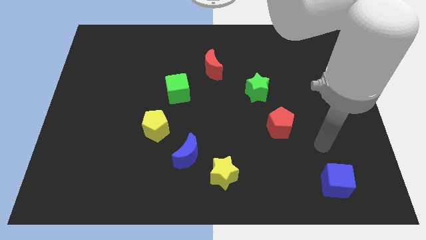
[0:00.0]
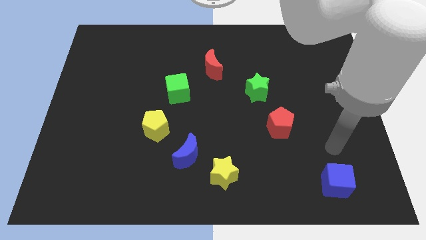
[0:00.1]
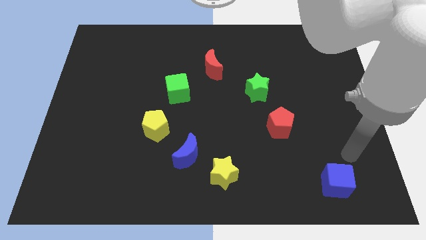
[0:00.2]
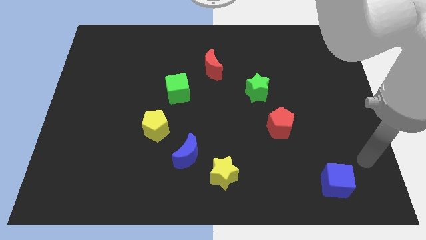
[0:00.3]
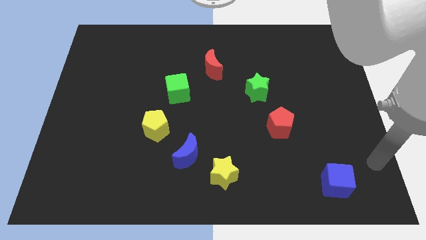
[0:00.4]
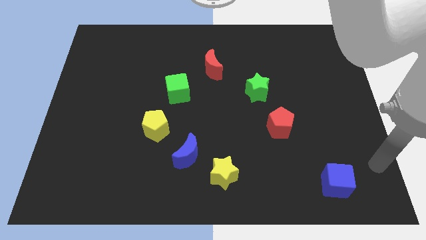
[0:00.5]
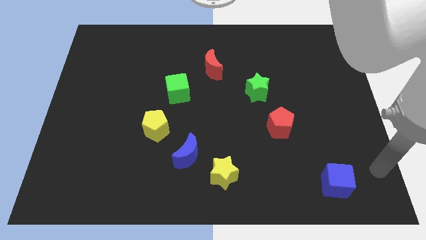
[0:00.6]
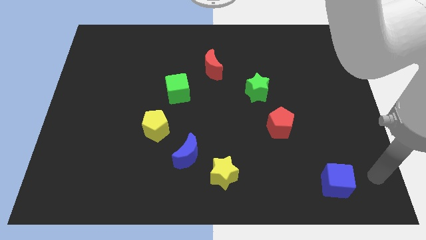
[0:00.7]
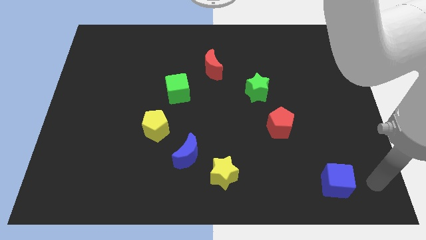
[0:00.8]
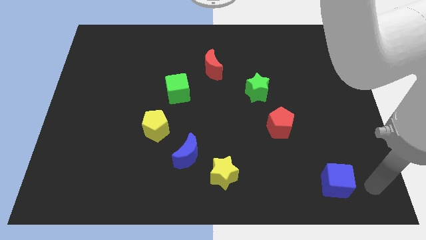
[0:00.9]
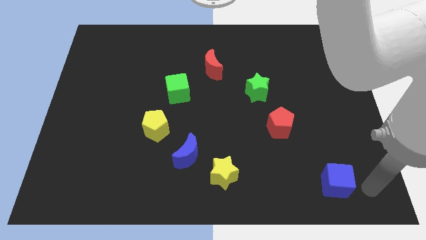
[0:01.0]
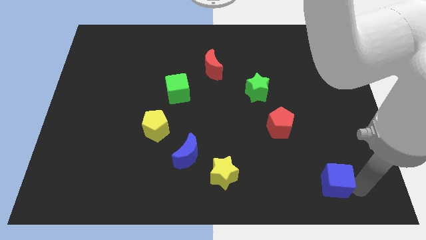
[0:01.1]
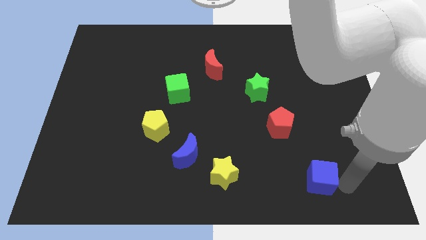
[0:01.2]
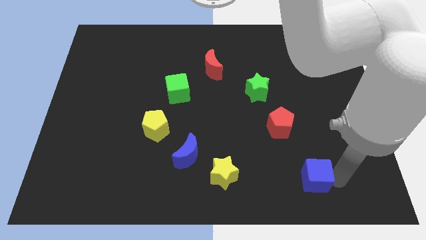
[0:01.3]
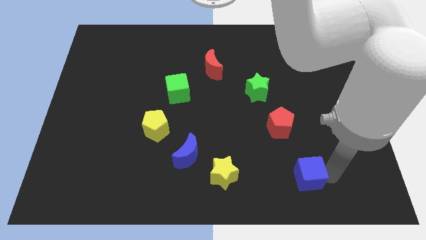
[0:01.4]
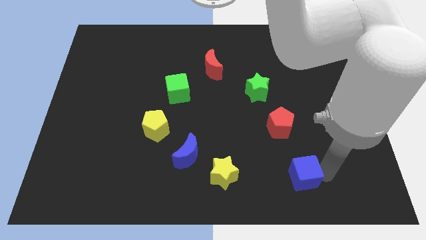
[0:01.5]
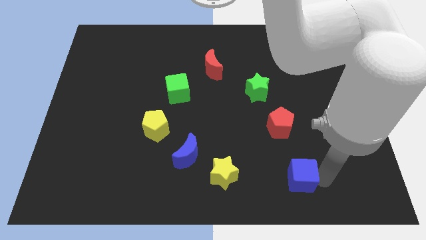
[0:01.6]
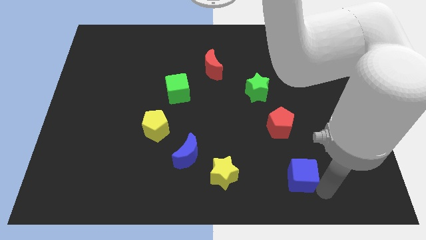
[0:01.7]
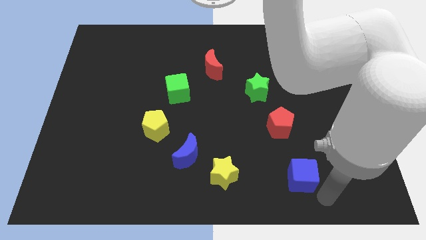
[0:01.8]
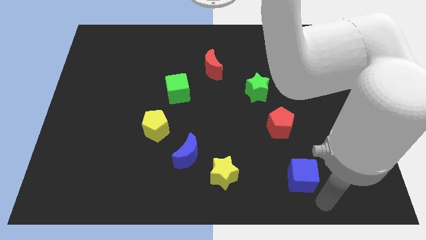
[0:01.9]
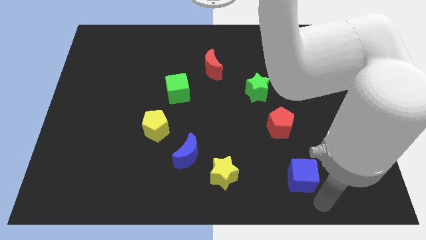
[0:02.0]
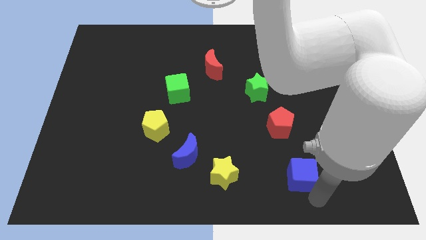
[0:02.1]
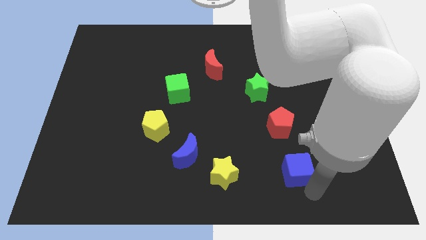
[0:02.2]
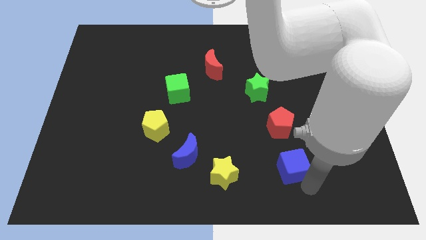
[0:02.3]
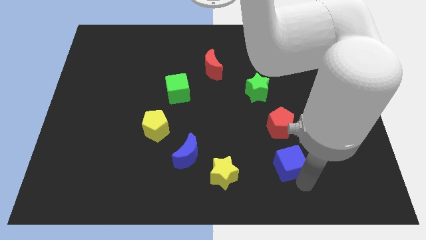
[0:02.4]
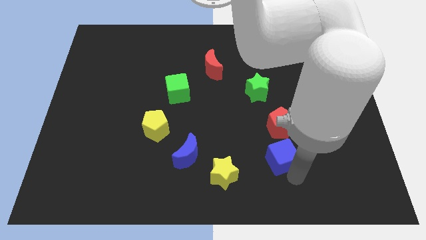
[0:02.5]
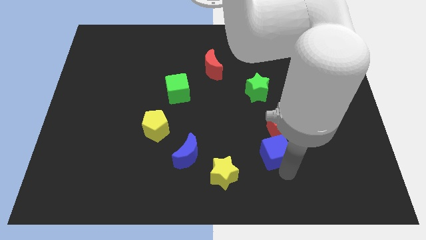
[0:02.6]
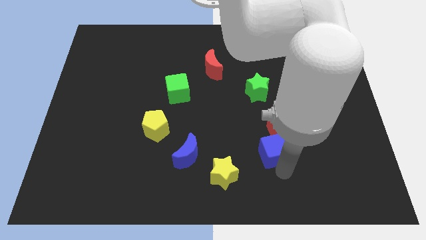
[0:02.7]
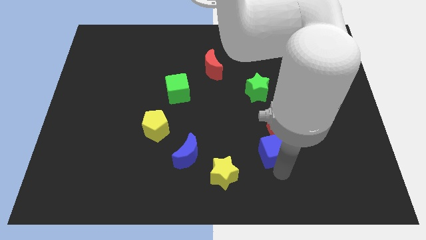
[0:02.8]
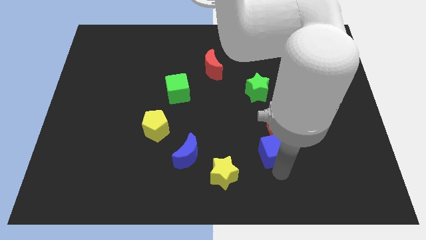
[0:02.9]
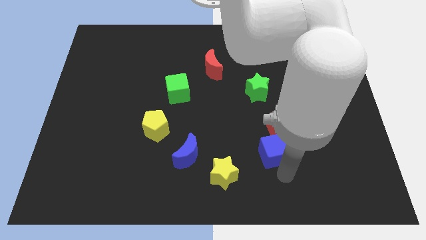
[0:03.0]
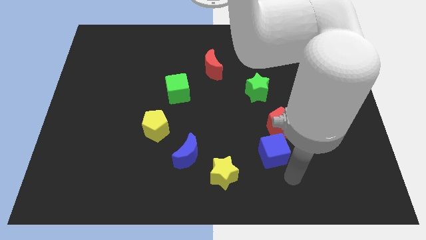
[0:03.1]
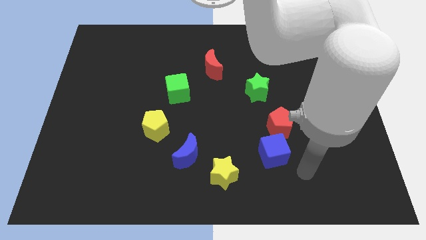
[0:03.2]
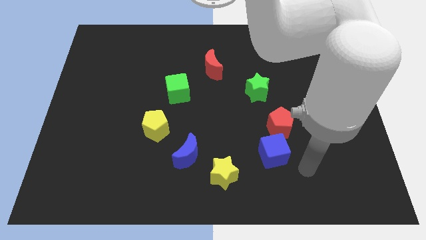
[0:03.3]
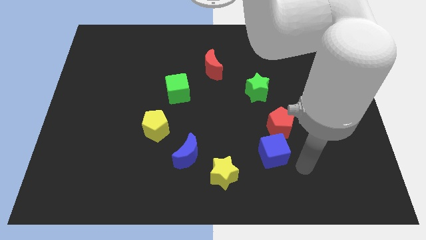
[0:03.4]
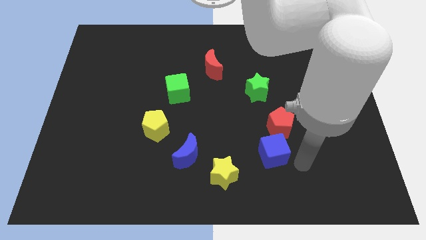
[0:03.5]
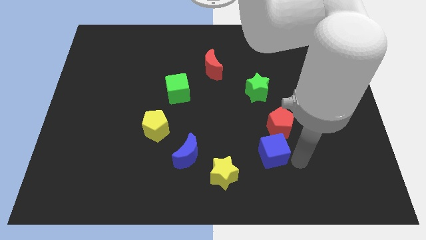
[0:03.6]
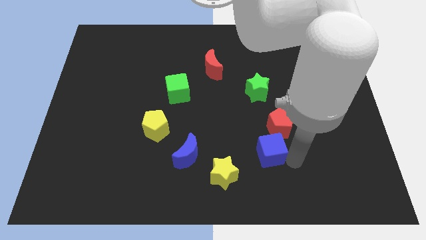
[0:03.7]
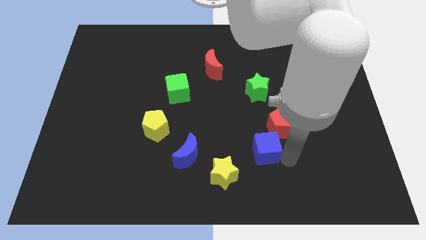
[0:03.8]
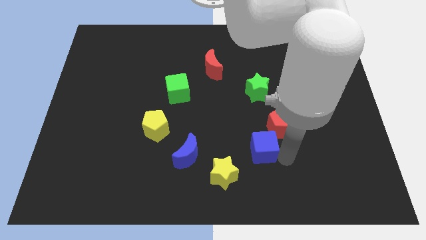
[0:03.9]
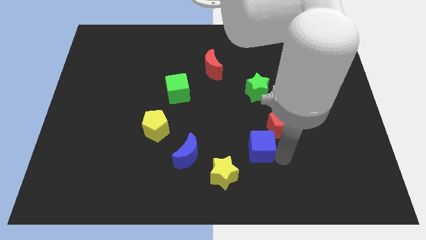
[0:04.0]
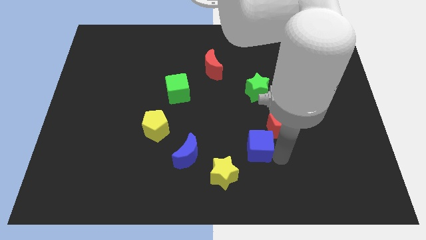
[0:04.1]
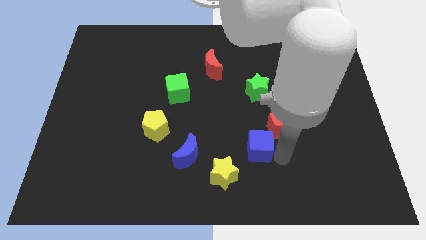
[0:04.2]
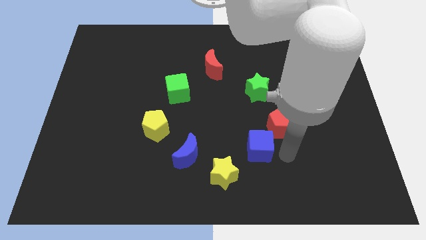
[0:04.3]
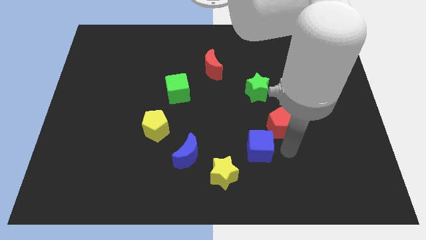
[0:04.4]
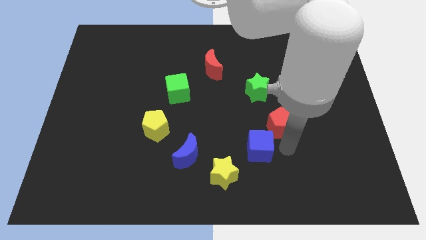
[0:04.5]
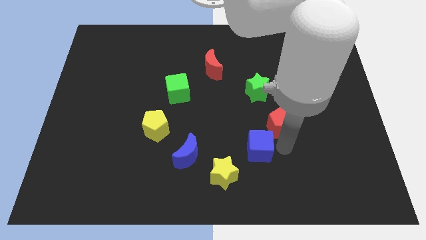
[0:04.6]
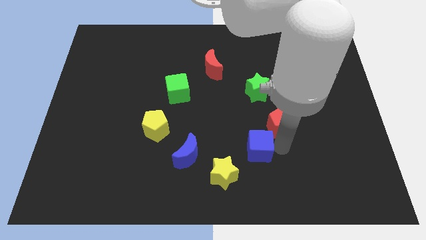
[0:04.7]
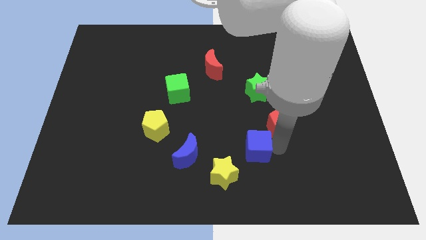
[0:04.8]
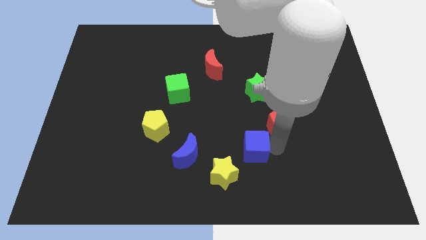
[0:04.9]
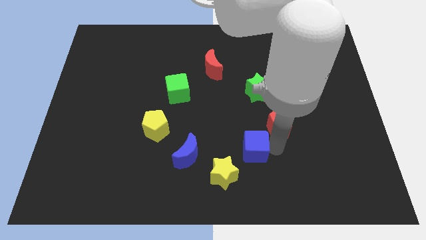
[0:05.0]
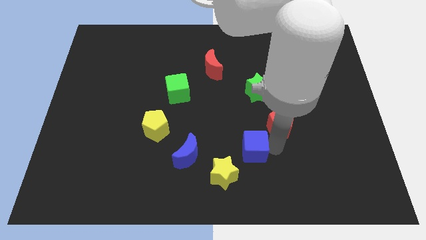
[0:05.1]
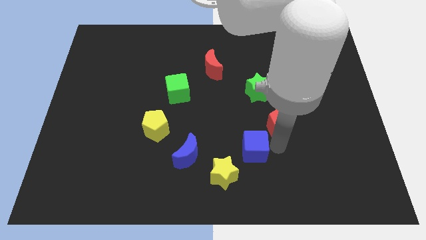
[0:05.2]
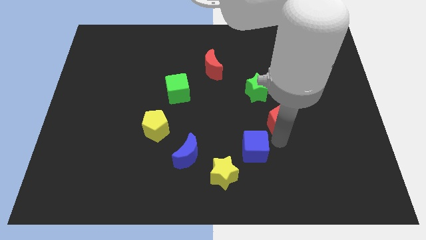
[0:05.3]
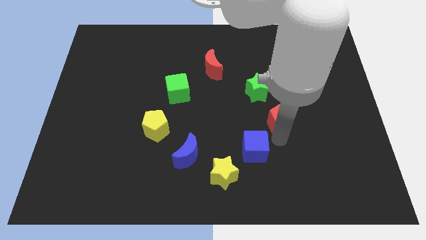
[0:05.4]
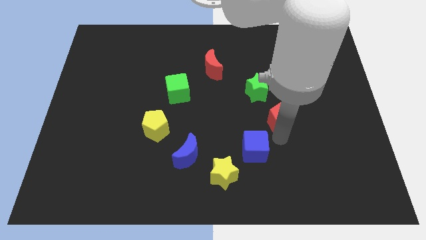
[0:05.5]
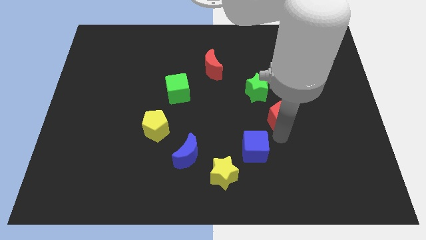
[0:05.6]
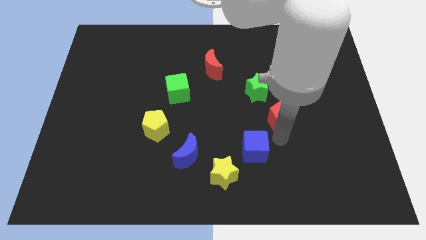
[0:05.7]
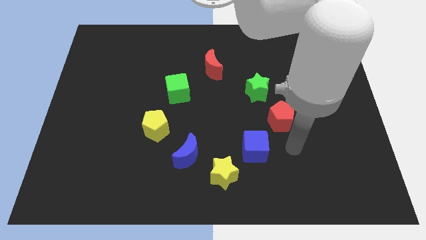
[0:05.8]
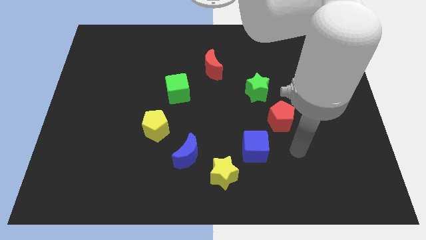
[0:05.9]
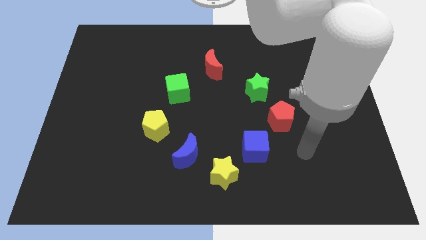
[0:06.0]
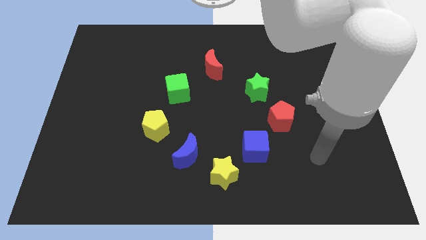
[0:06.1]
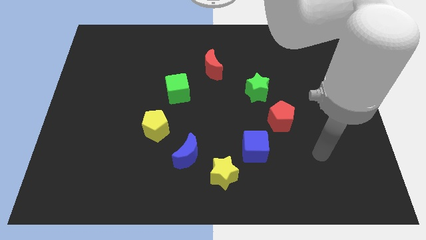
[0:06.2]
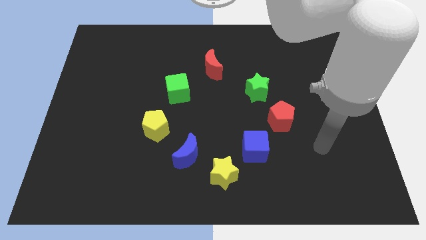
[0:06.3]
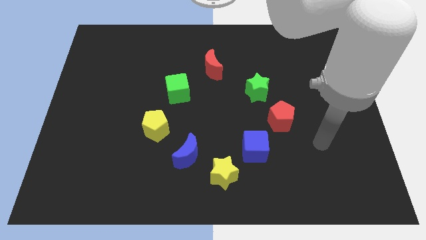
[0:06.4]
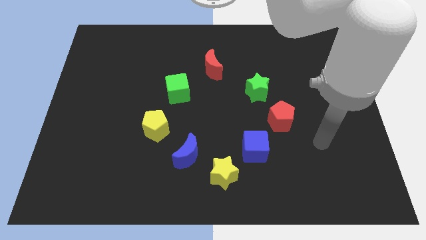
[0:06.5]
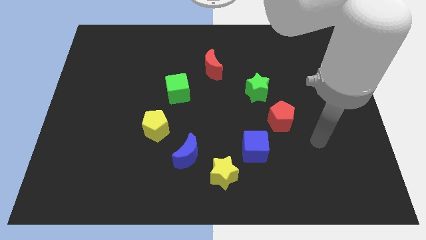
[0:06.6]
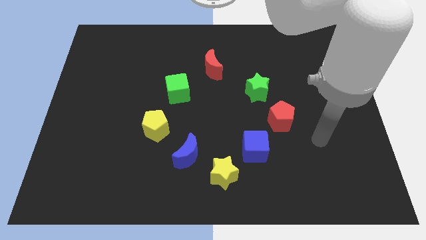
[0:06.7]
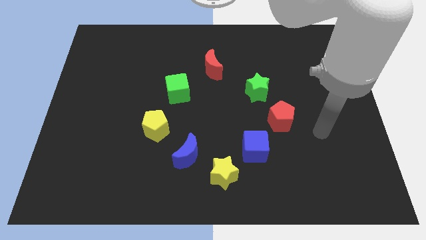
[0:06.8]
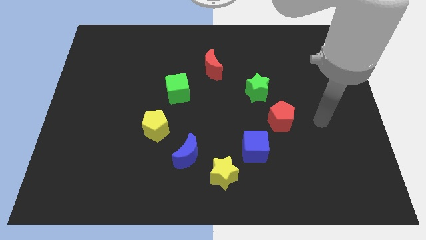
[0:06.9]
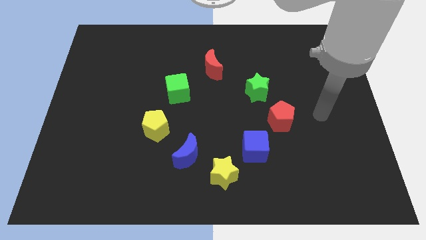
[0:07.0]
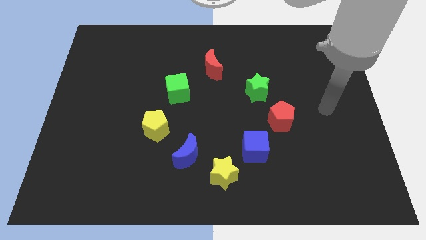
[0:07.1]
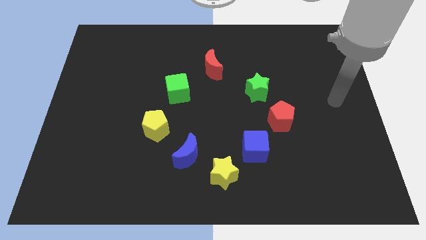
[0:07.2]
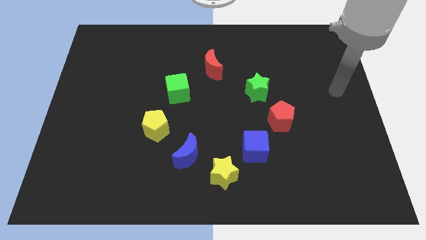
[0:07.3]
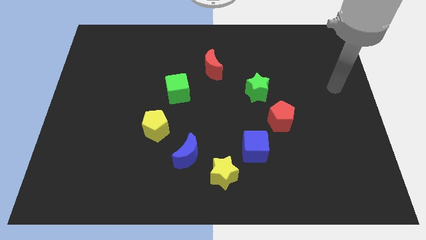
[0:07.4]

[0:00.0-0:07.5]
make a circle by joining with the other blocks

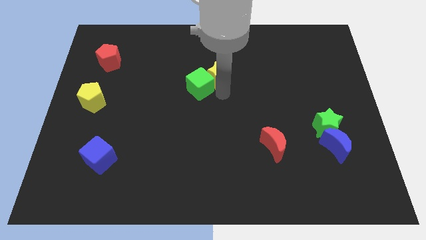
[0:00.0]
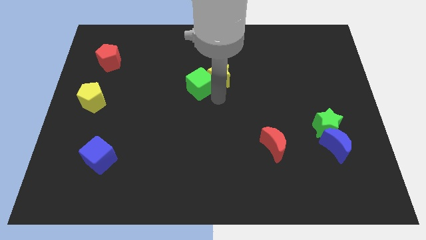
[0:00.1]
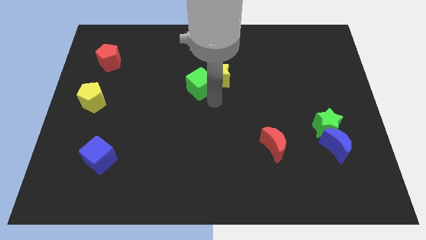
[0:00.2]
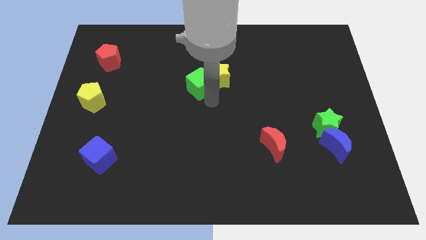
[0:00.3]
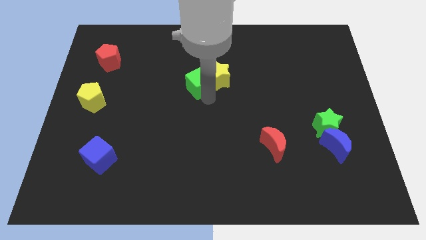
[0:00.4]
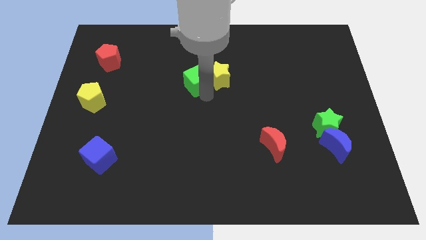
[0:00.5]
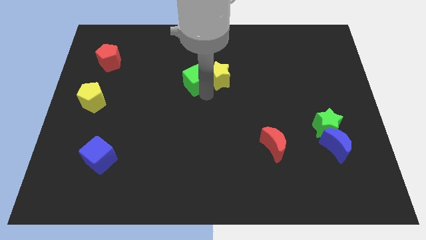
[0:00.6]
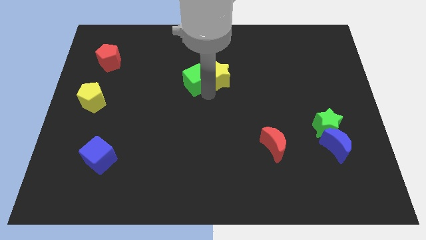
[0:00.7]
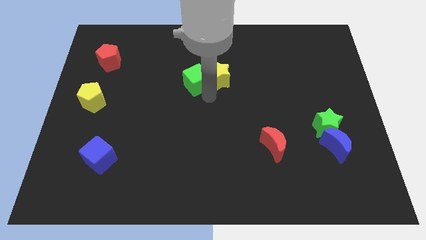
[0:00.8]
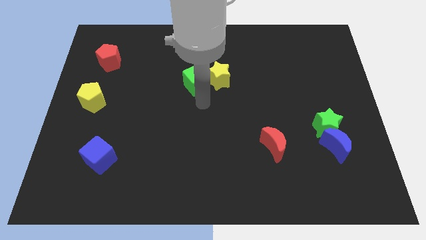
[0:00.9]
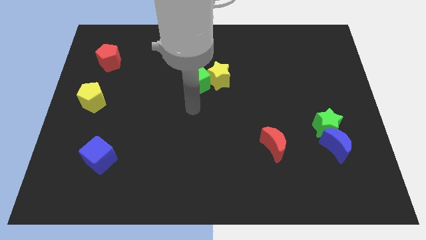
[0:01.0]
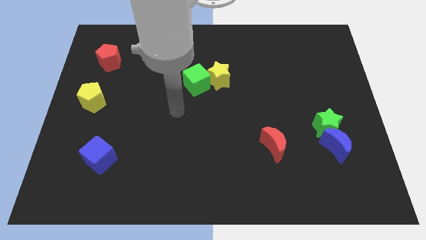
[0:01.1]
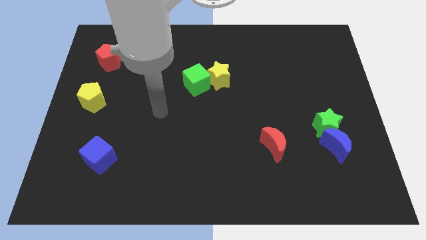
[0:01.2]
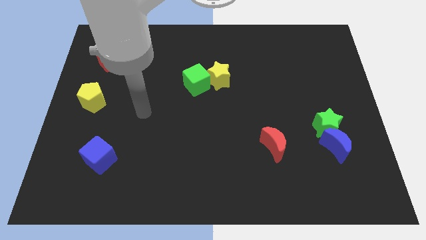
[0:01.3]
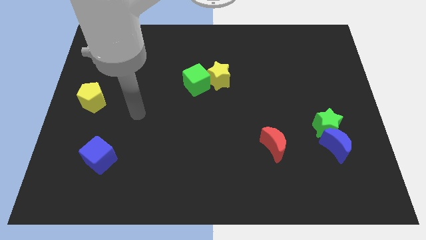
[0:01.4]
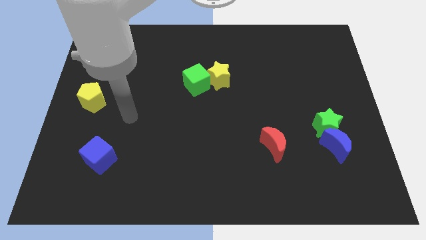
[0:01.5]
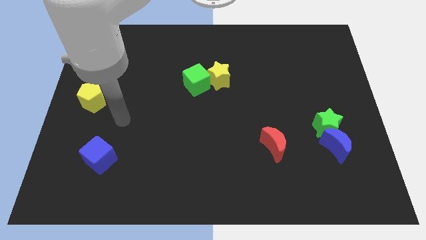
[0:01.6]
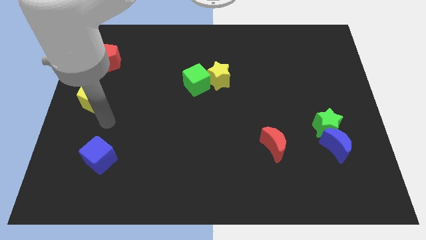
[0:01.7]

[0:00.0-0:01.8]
move the arm away from the green cube
